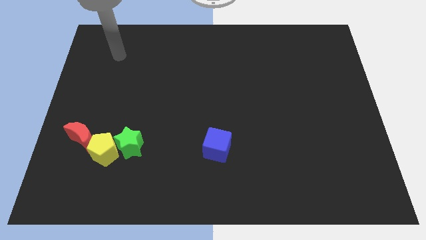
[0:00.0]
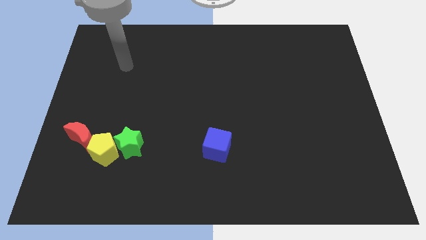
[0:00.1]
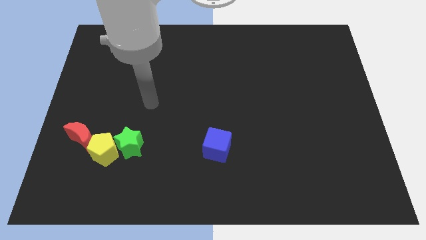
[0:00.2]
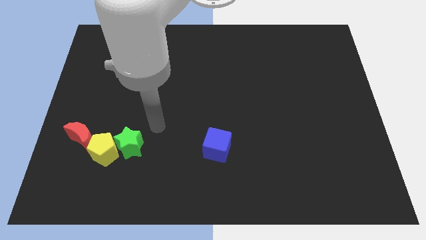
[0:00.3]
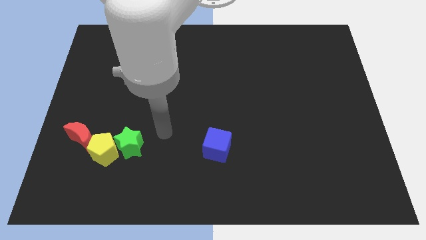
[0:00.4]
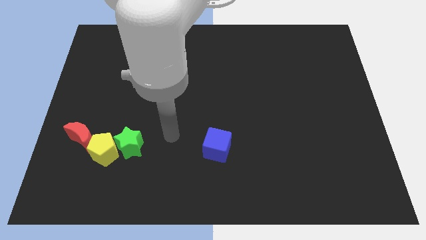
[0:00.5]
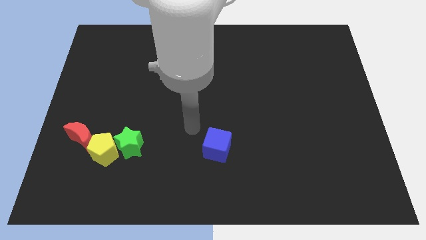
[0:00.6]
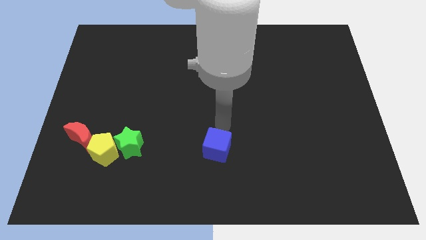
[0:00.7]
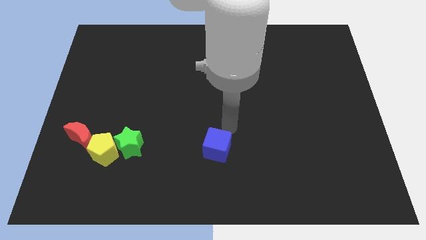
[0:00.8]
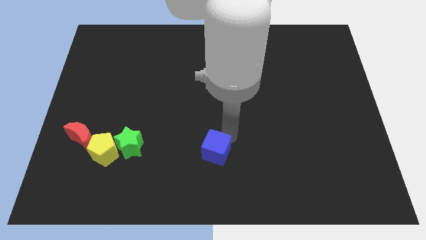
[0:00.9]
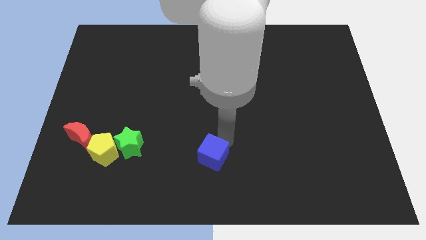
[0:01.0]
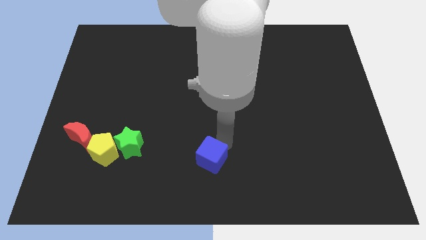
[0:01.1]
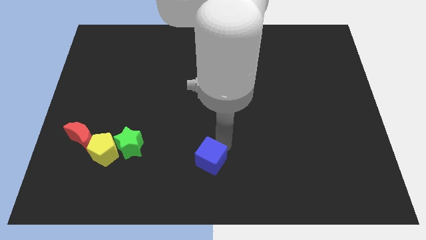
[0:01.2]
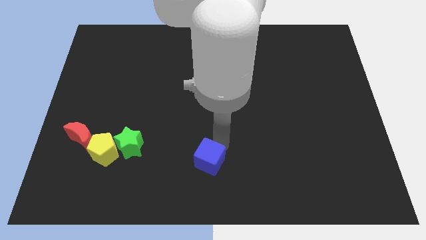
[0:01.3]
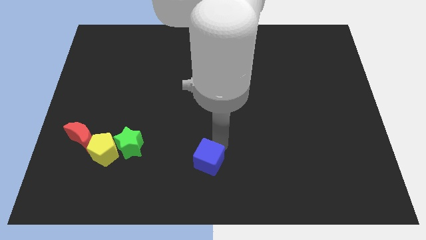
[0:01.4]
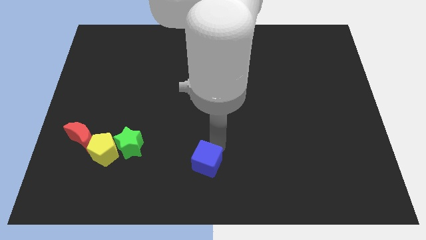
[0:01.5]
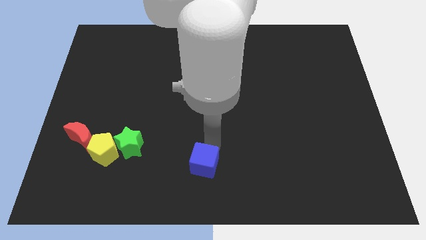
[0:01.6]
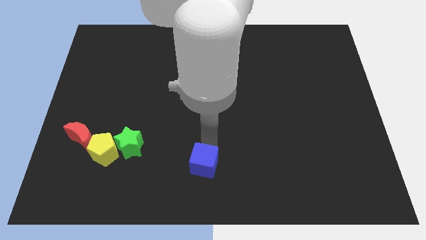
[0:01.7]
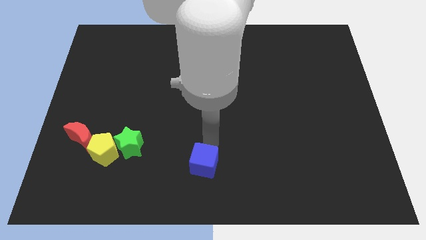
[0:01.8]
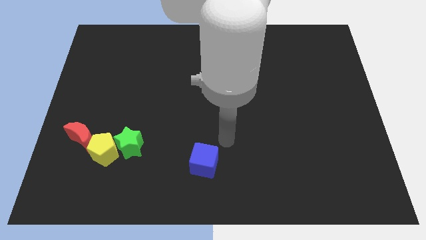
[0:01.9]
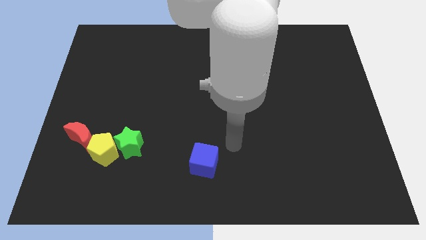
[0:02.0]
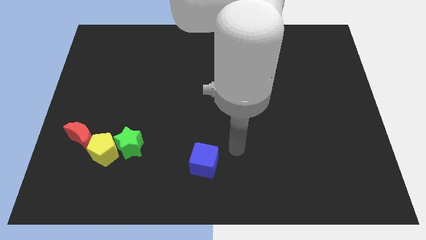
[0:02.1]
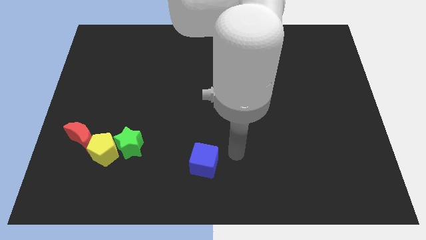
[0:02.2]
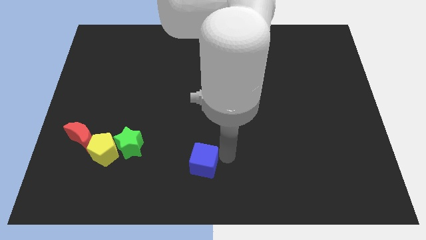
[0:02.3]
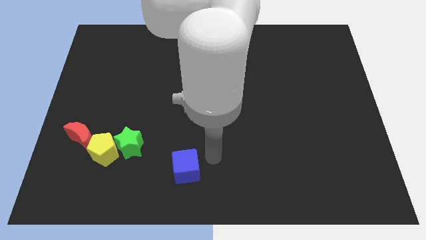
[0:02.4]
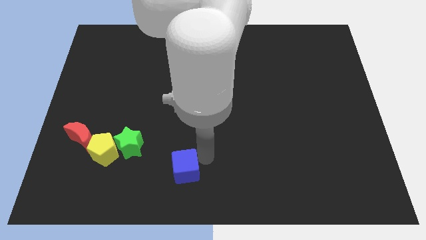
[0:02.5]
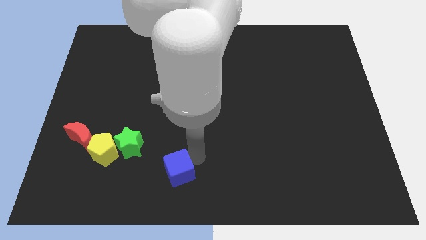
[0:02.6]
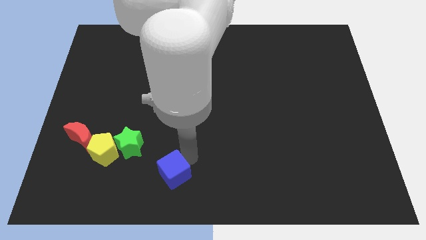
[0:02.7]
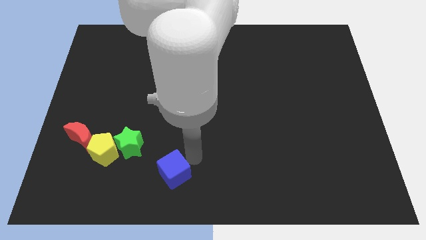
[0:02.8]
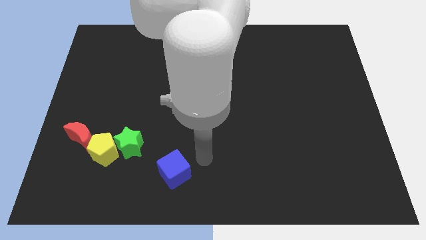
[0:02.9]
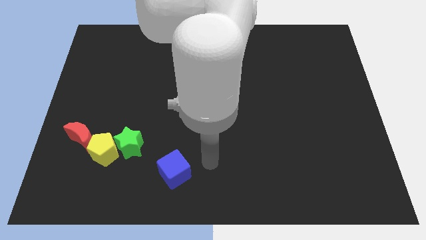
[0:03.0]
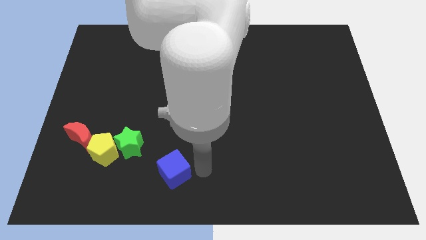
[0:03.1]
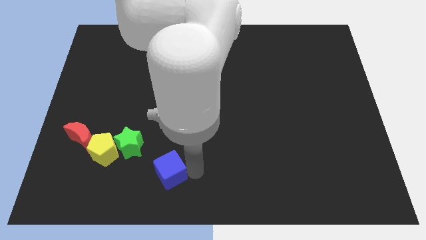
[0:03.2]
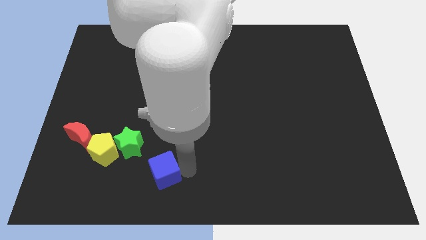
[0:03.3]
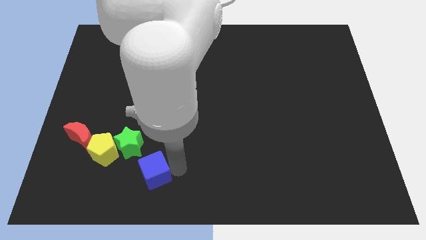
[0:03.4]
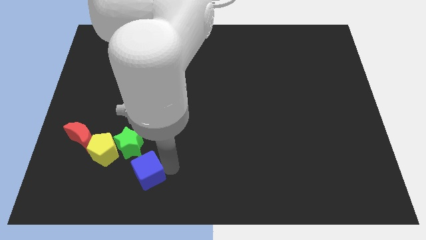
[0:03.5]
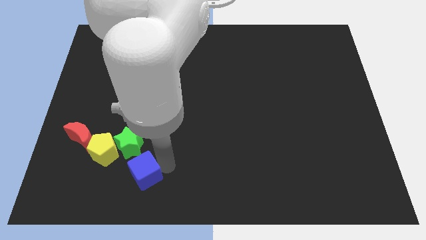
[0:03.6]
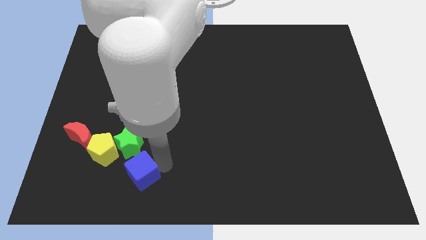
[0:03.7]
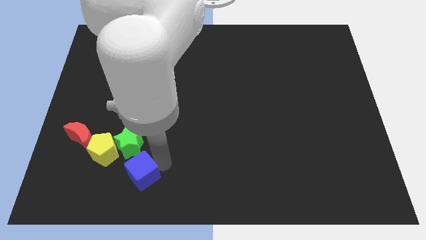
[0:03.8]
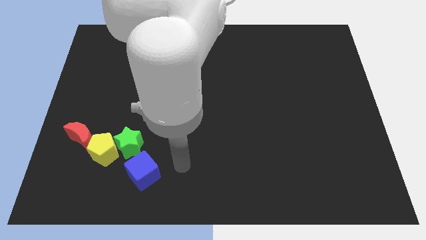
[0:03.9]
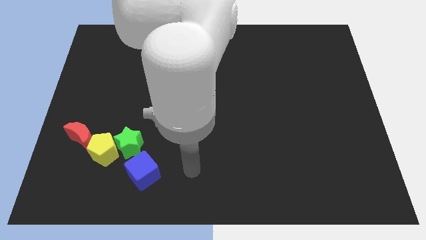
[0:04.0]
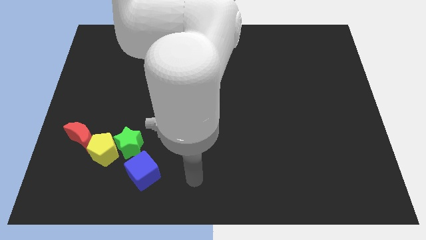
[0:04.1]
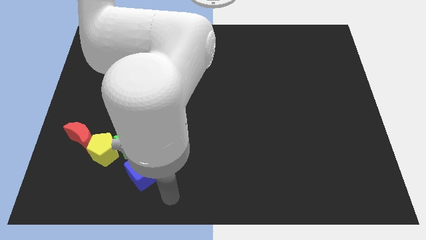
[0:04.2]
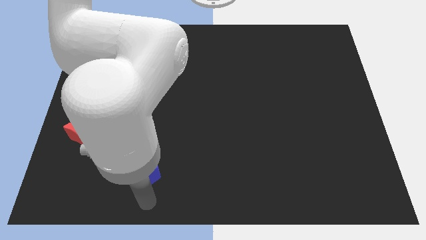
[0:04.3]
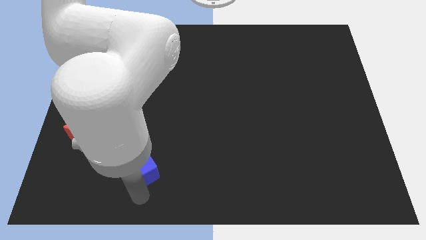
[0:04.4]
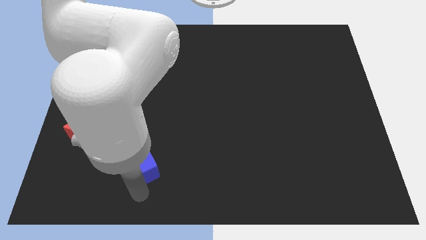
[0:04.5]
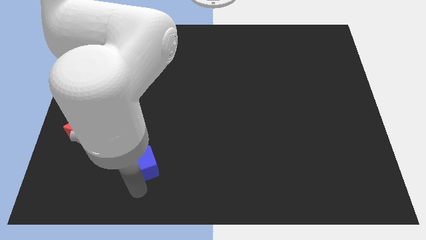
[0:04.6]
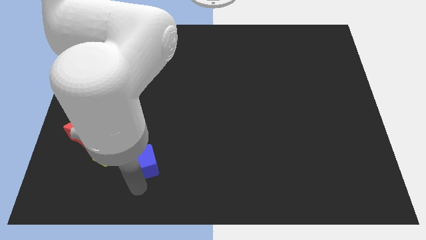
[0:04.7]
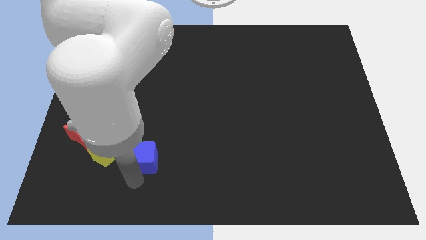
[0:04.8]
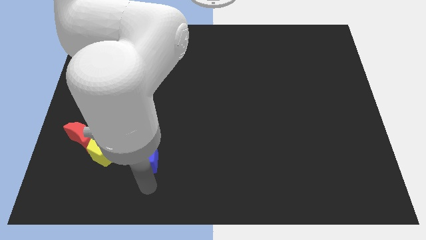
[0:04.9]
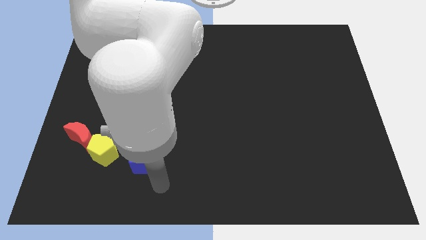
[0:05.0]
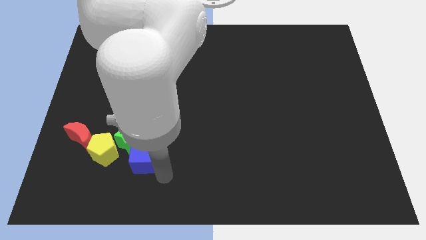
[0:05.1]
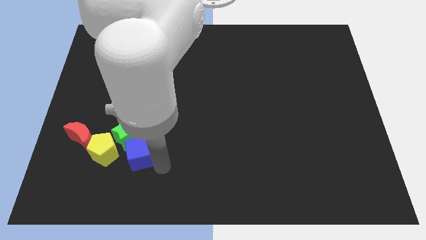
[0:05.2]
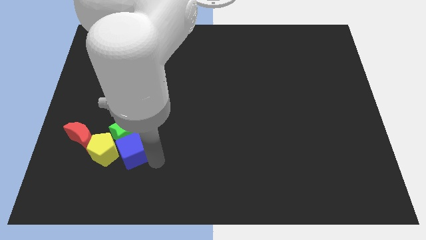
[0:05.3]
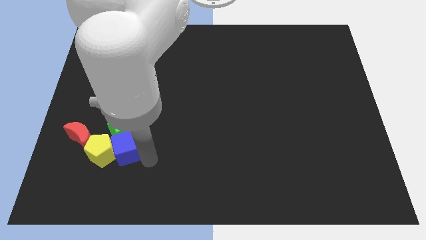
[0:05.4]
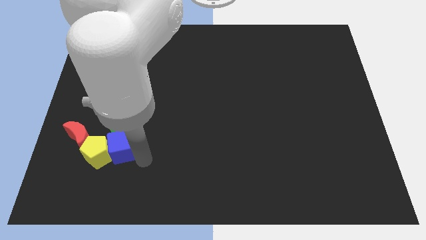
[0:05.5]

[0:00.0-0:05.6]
push the blue cube to the pentagon

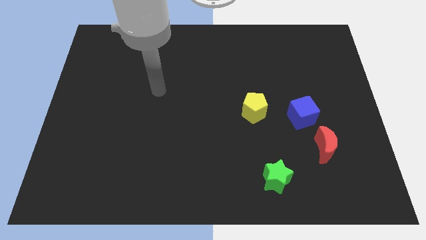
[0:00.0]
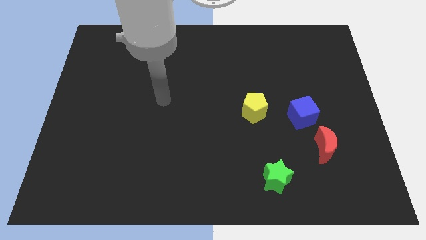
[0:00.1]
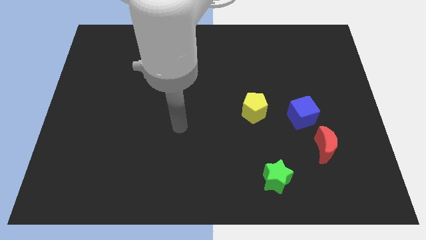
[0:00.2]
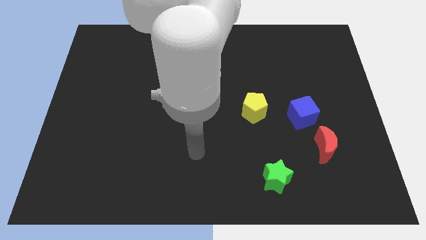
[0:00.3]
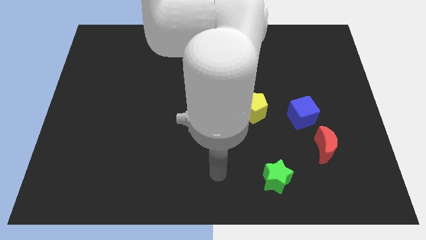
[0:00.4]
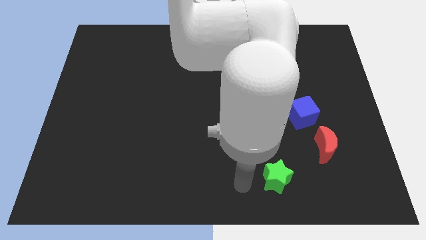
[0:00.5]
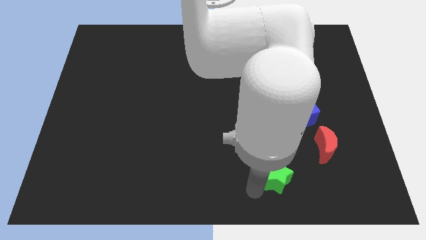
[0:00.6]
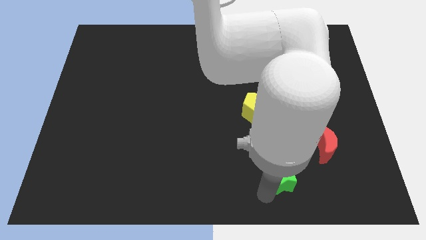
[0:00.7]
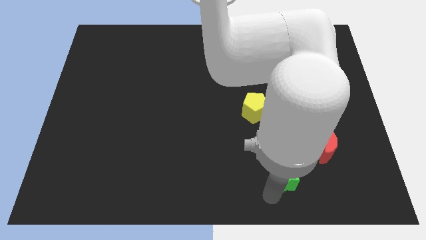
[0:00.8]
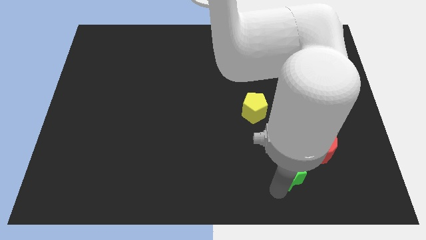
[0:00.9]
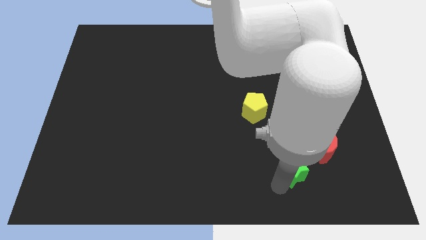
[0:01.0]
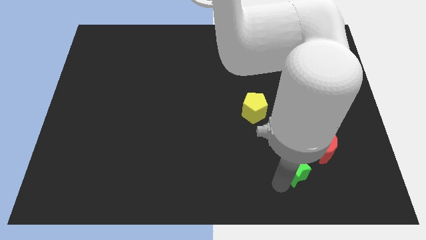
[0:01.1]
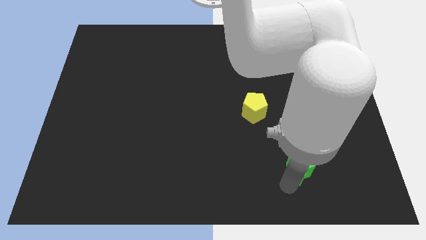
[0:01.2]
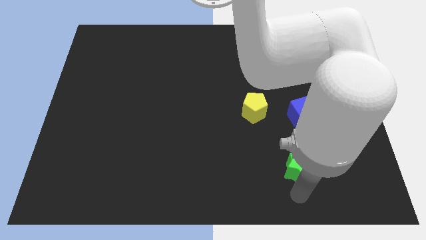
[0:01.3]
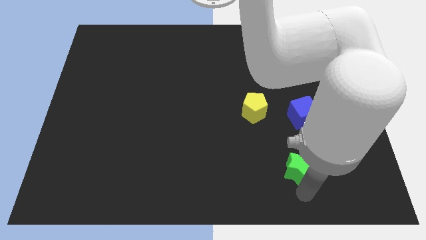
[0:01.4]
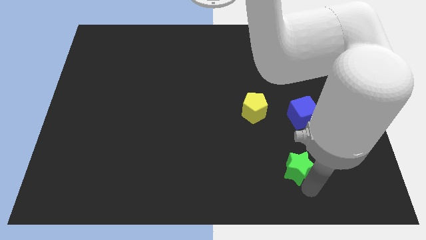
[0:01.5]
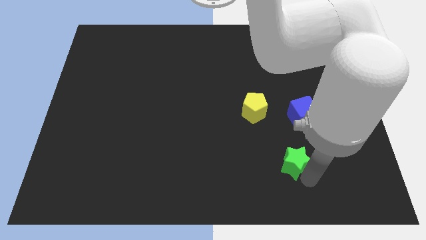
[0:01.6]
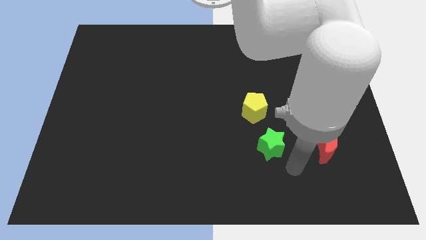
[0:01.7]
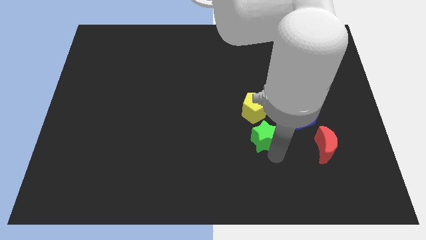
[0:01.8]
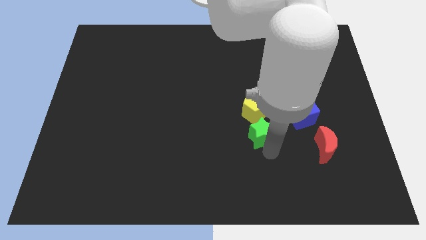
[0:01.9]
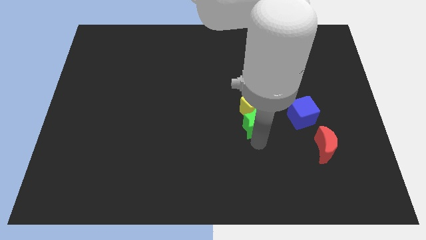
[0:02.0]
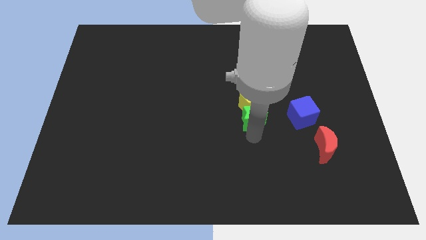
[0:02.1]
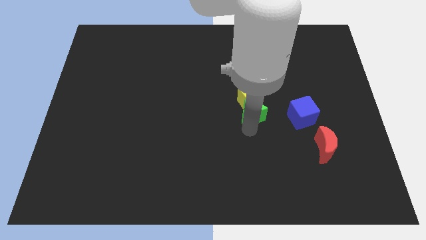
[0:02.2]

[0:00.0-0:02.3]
slide the green star towards the pentagon

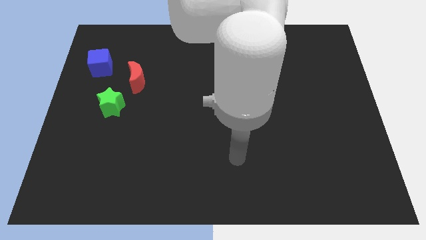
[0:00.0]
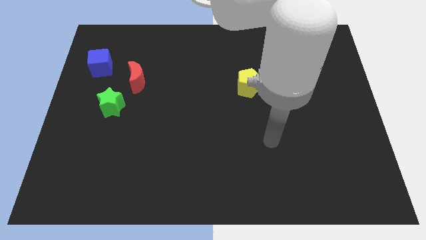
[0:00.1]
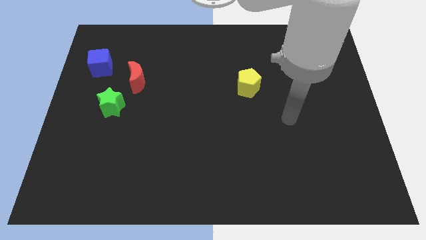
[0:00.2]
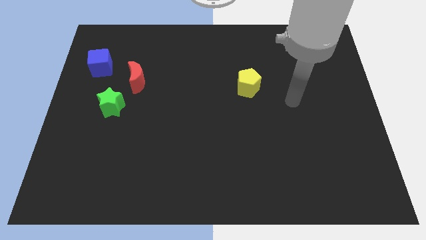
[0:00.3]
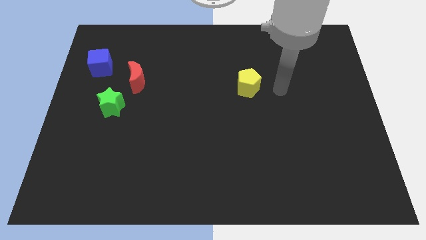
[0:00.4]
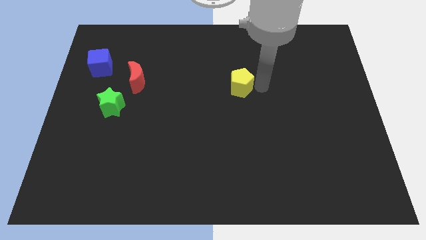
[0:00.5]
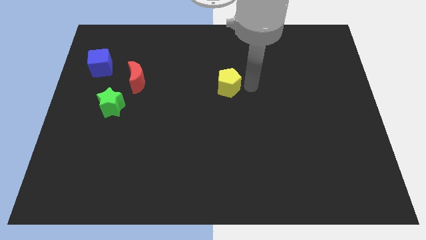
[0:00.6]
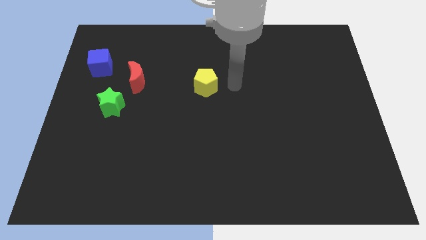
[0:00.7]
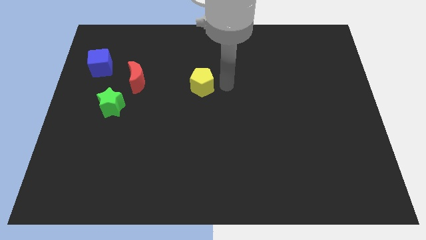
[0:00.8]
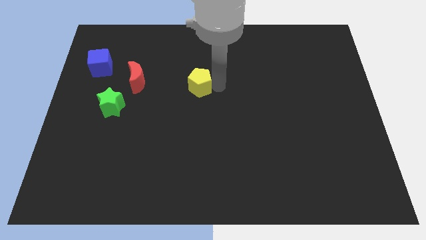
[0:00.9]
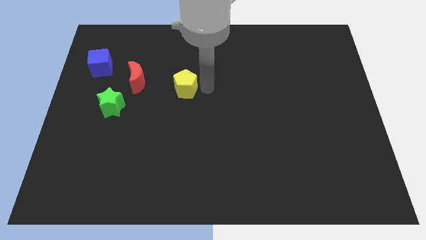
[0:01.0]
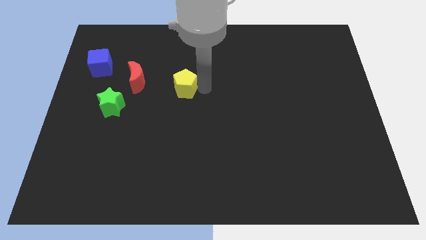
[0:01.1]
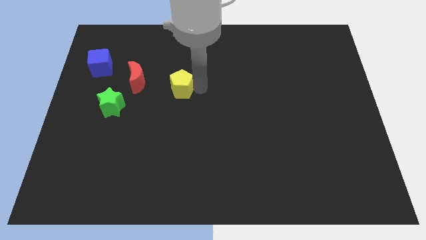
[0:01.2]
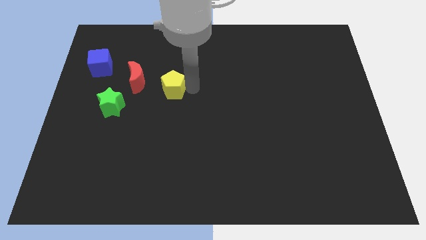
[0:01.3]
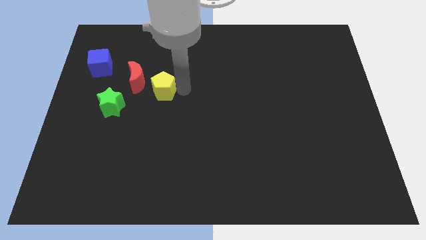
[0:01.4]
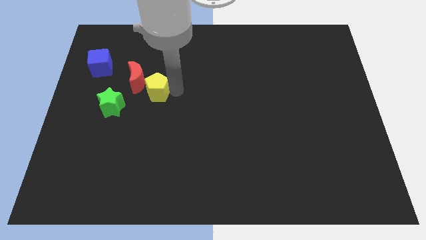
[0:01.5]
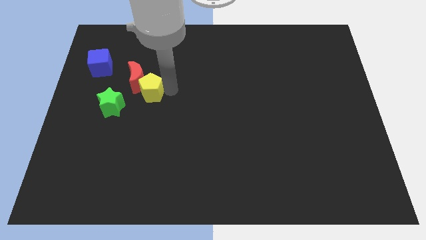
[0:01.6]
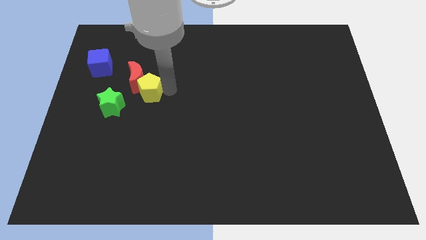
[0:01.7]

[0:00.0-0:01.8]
slide the yellow pentagon towards the red block
